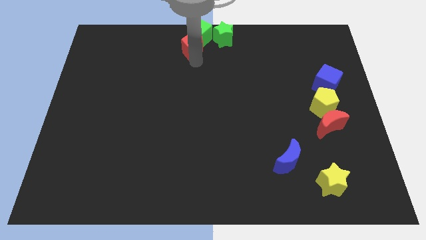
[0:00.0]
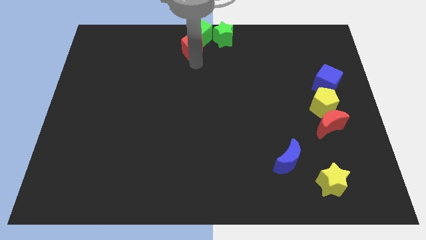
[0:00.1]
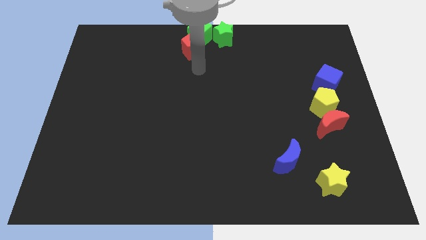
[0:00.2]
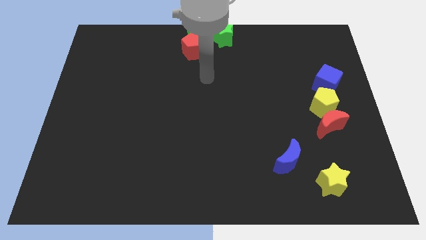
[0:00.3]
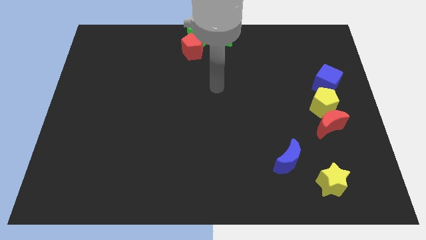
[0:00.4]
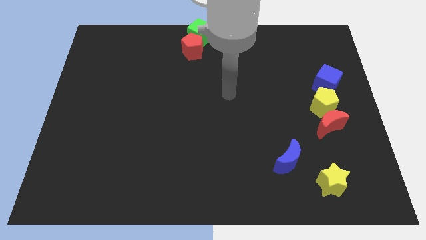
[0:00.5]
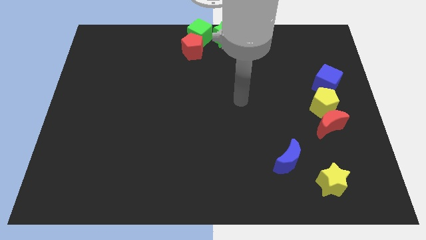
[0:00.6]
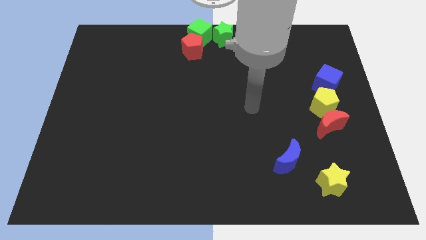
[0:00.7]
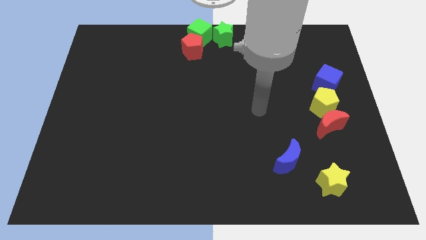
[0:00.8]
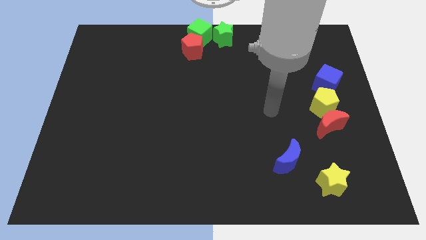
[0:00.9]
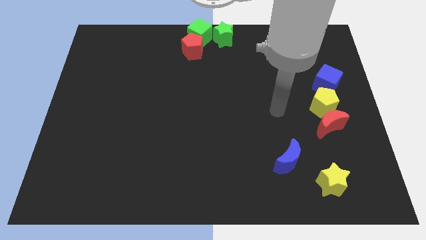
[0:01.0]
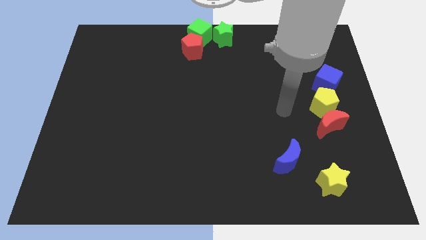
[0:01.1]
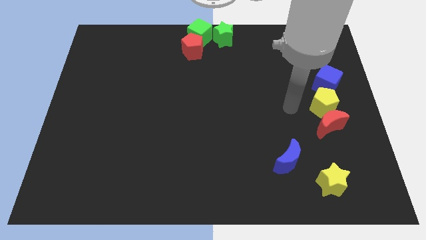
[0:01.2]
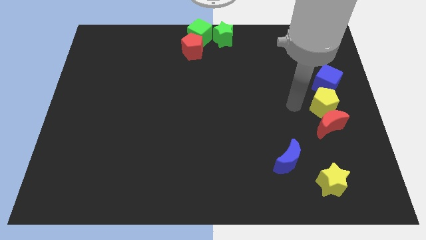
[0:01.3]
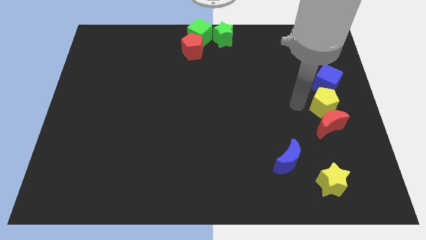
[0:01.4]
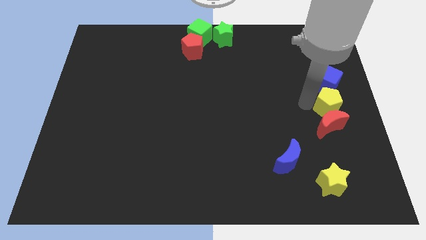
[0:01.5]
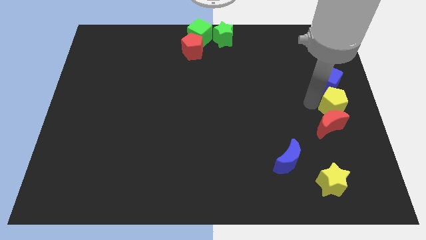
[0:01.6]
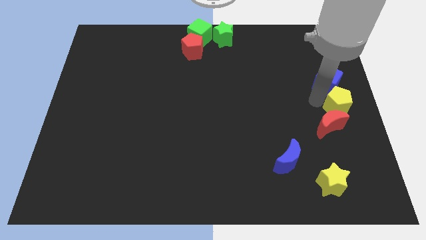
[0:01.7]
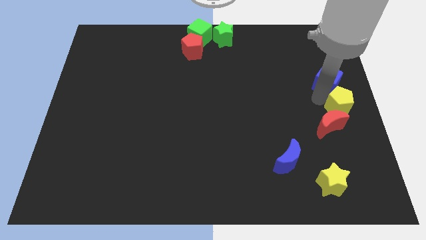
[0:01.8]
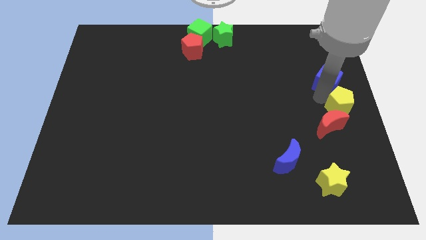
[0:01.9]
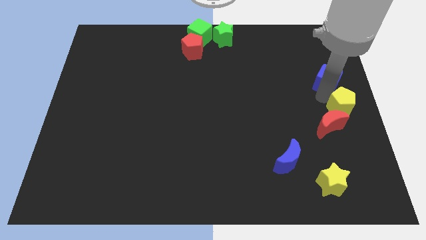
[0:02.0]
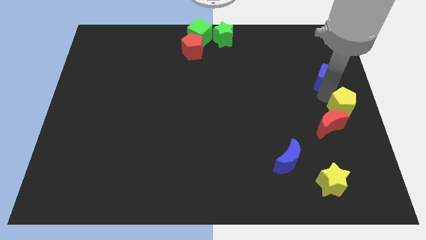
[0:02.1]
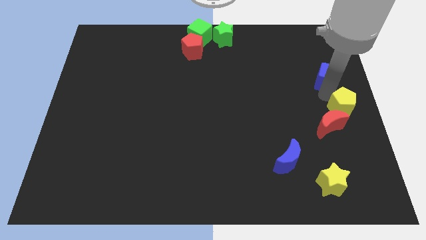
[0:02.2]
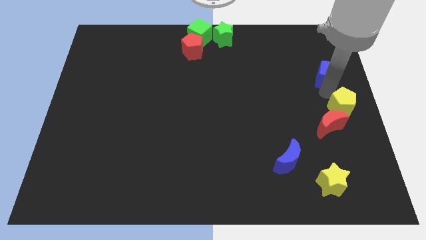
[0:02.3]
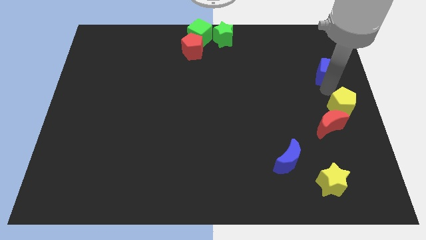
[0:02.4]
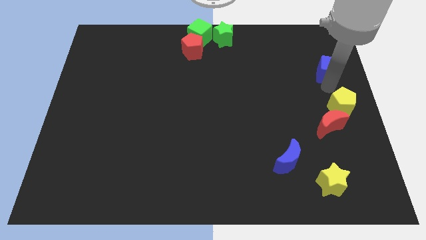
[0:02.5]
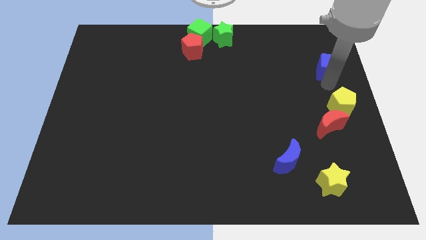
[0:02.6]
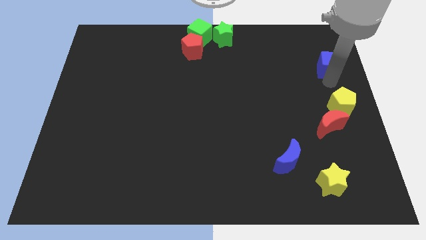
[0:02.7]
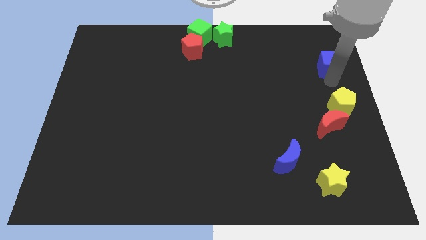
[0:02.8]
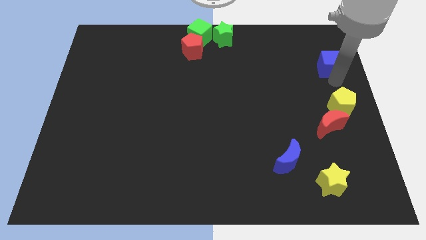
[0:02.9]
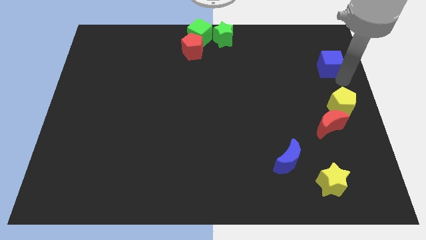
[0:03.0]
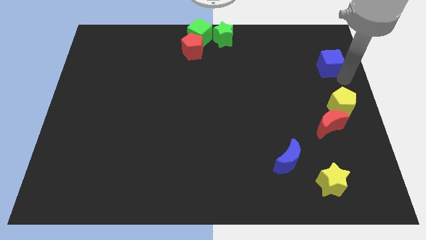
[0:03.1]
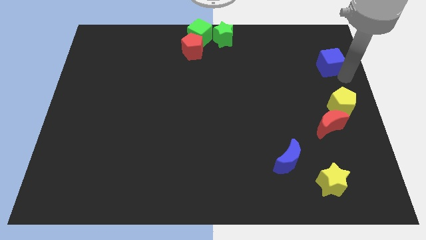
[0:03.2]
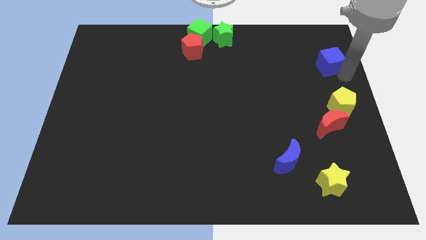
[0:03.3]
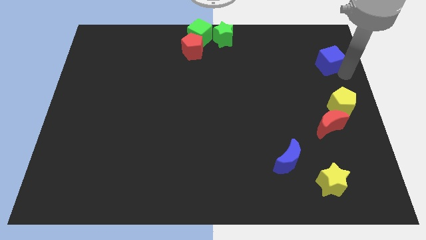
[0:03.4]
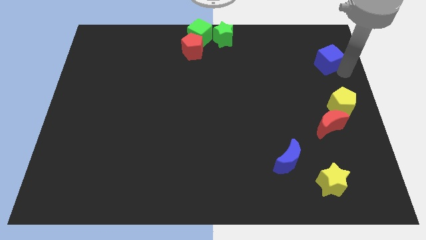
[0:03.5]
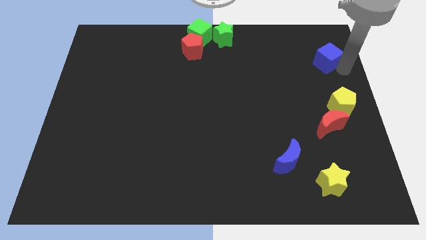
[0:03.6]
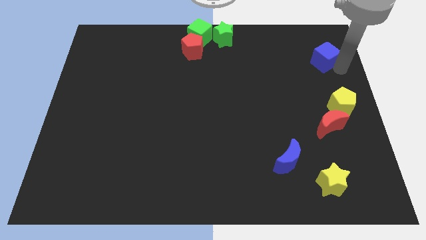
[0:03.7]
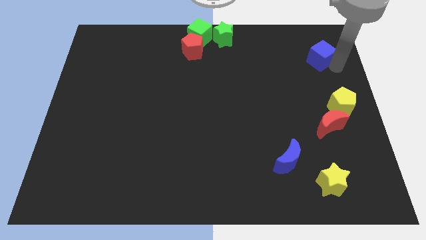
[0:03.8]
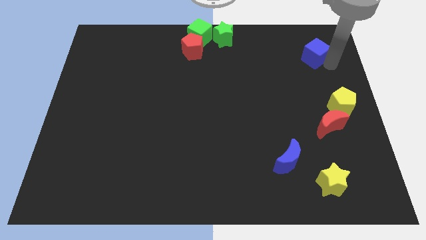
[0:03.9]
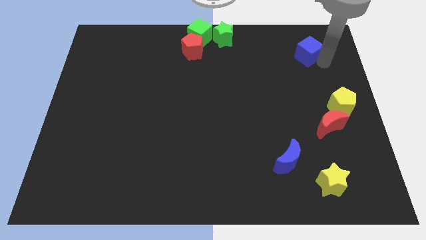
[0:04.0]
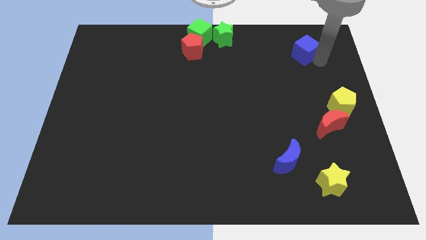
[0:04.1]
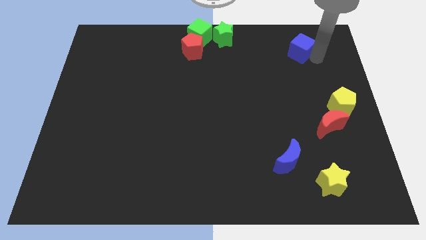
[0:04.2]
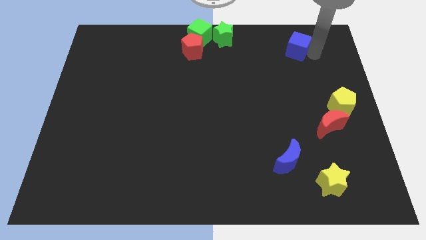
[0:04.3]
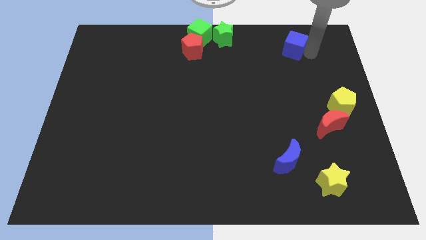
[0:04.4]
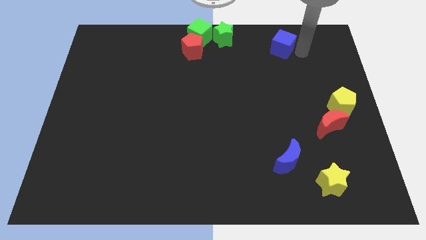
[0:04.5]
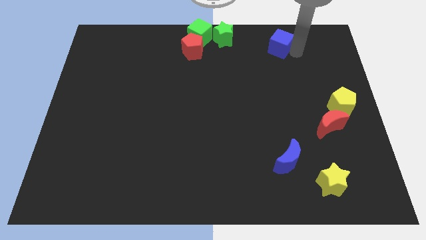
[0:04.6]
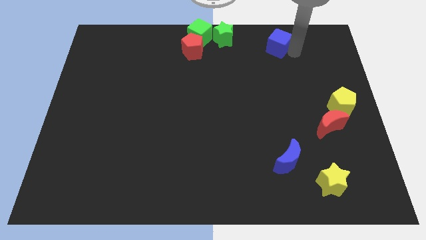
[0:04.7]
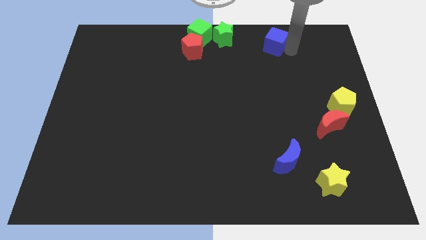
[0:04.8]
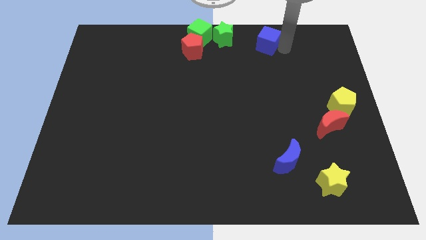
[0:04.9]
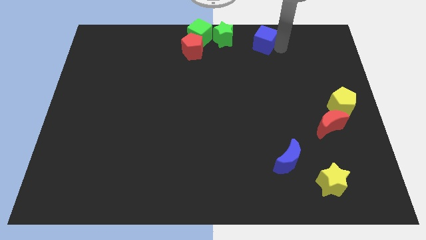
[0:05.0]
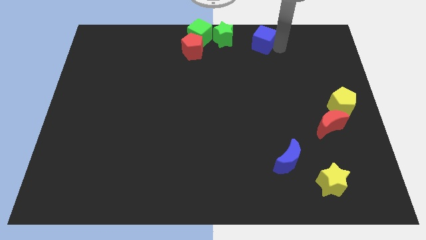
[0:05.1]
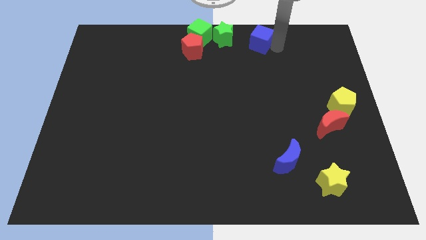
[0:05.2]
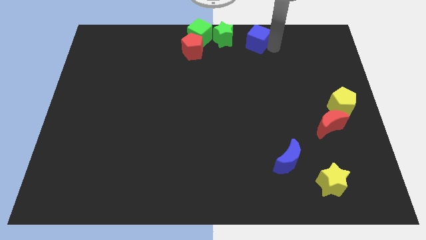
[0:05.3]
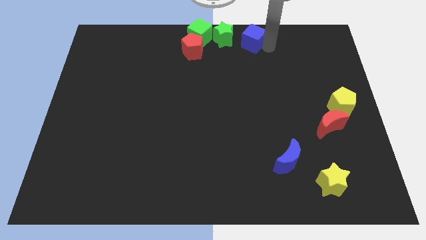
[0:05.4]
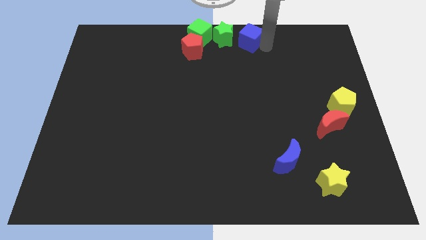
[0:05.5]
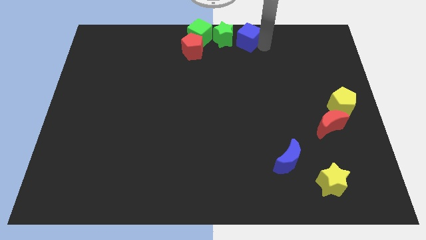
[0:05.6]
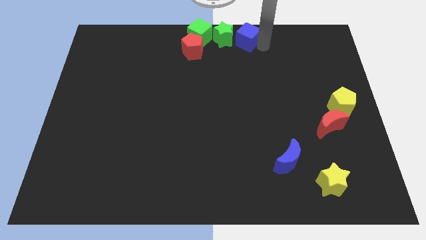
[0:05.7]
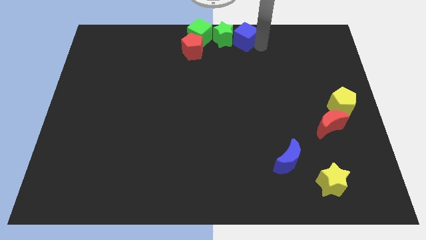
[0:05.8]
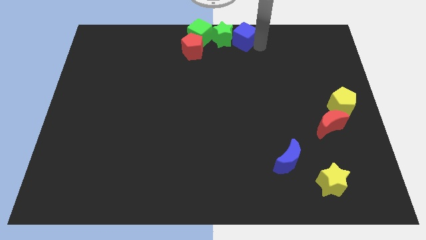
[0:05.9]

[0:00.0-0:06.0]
move the blue cube to the right of the green star

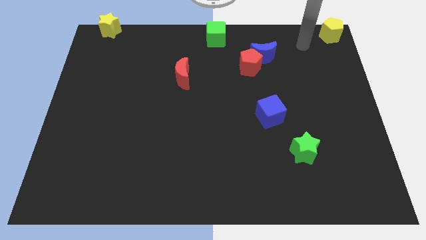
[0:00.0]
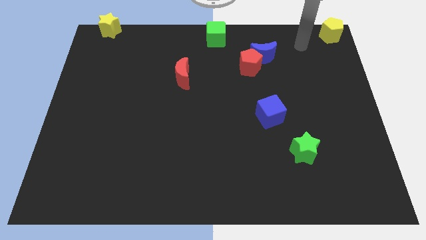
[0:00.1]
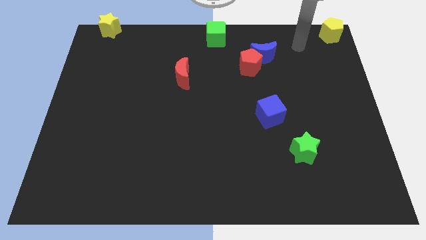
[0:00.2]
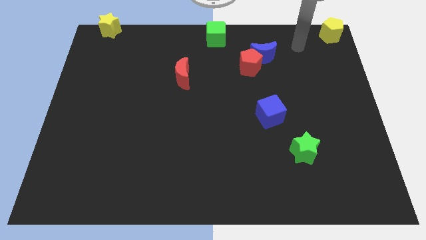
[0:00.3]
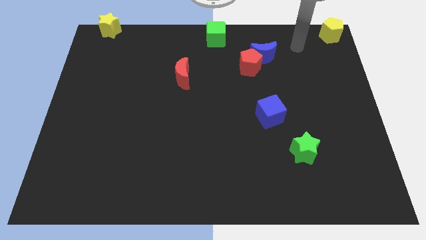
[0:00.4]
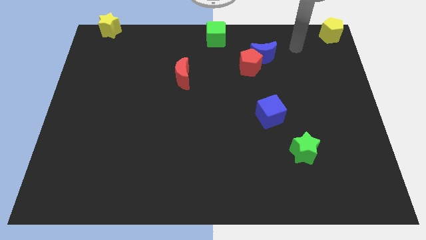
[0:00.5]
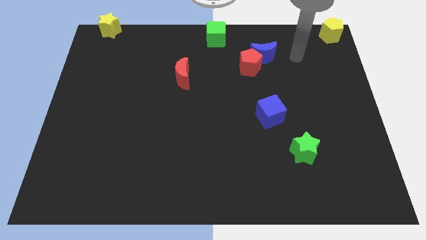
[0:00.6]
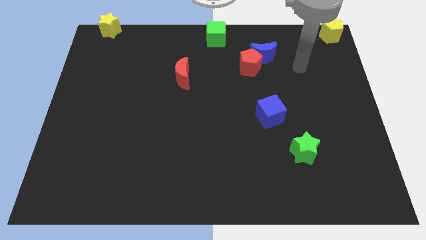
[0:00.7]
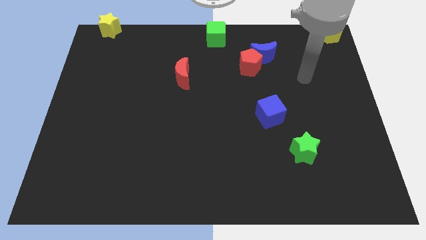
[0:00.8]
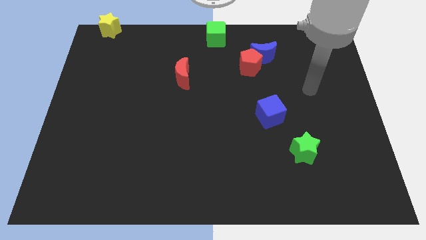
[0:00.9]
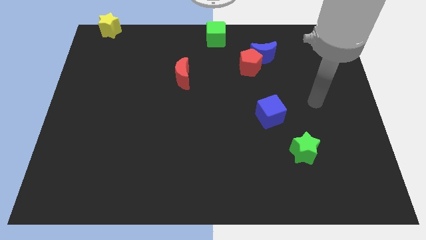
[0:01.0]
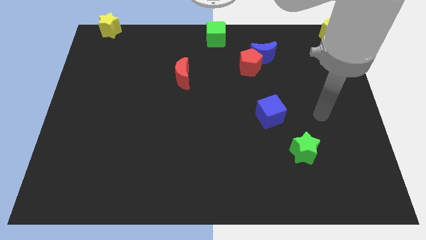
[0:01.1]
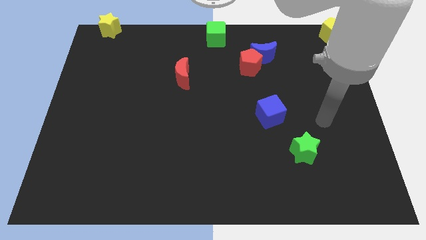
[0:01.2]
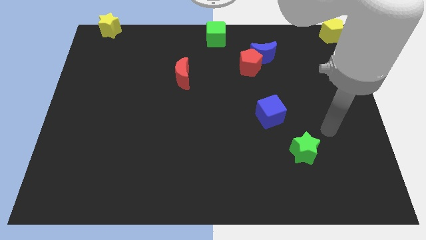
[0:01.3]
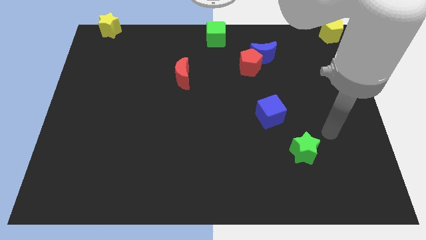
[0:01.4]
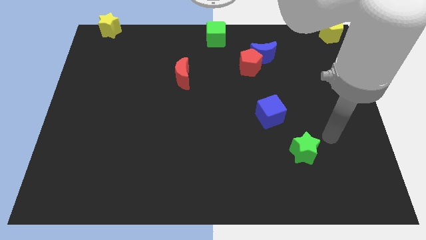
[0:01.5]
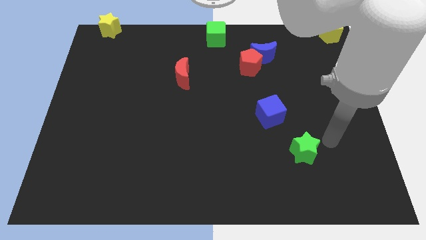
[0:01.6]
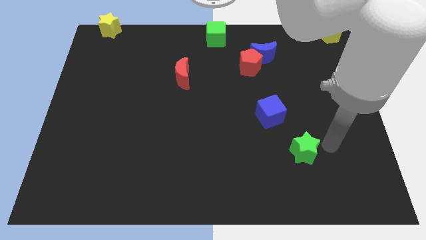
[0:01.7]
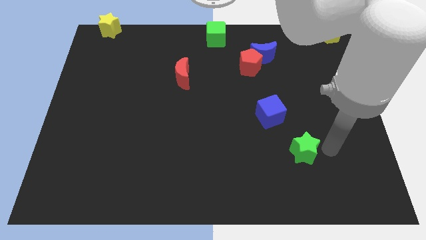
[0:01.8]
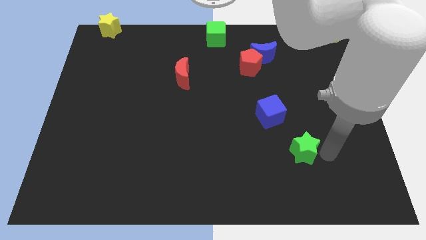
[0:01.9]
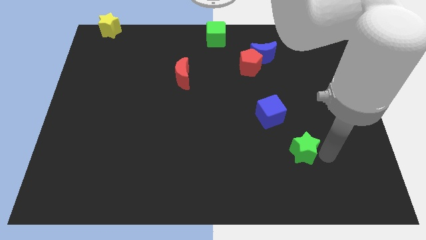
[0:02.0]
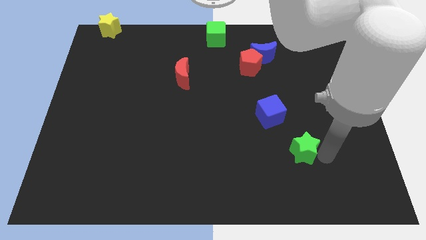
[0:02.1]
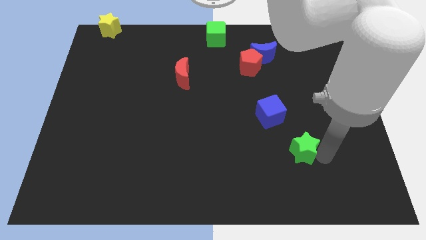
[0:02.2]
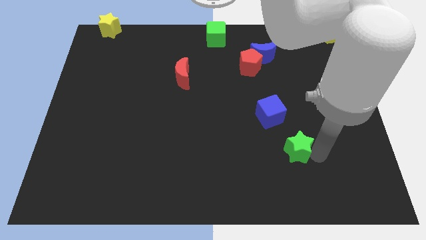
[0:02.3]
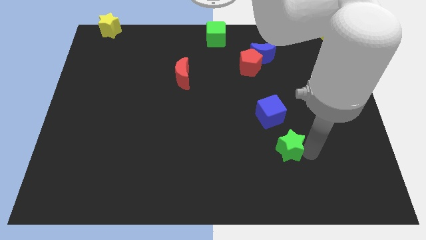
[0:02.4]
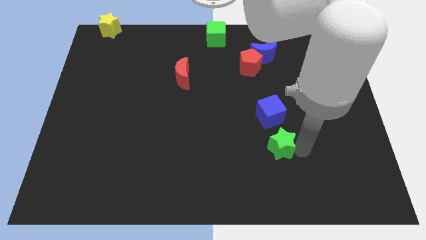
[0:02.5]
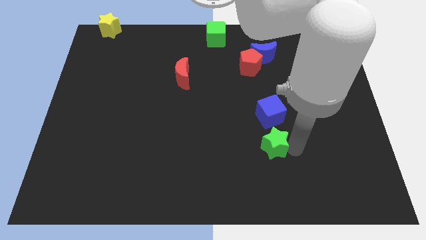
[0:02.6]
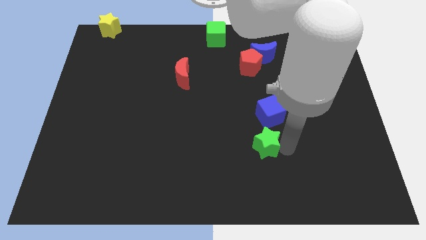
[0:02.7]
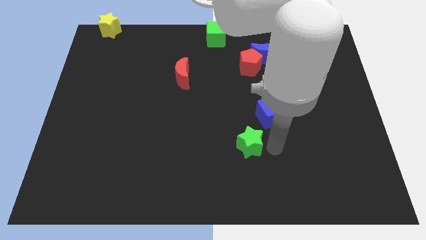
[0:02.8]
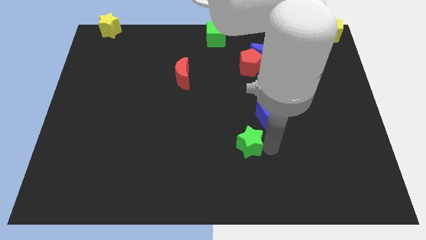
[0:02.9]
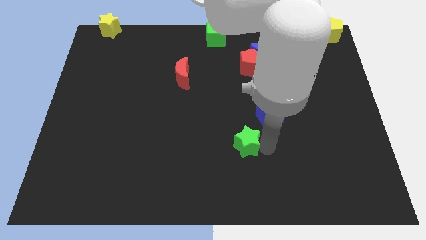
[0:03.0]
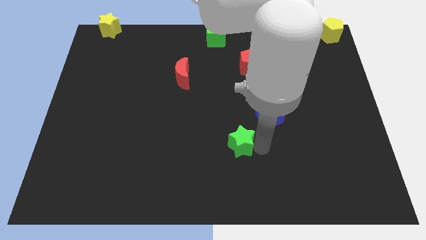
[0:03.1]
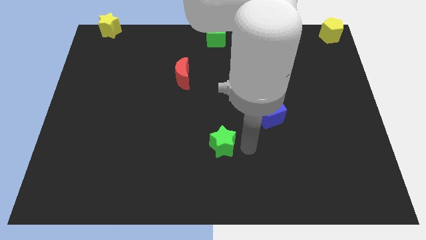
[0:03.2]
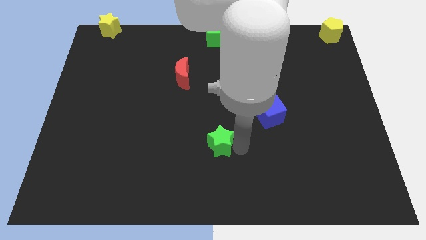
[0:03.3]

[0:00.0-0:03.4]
push the green star diagonally on the bottom left side of the blue cube
